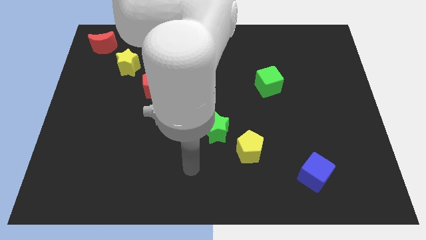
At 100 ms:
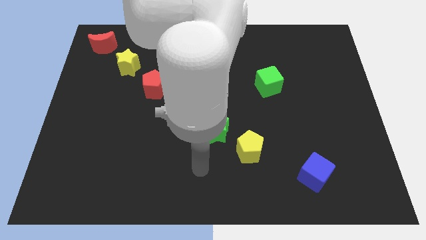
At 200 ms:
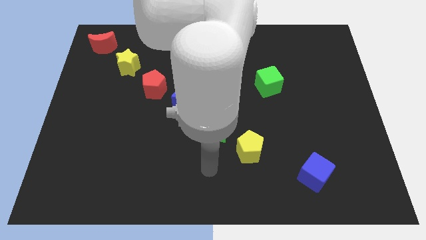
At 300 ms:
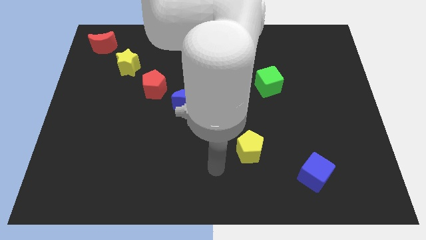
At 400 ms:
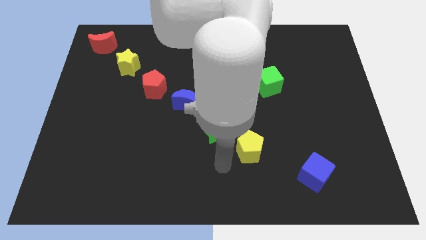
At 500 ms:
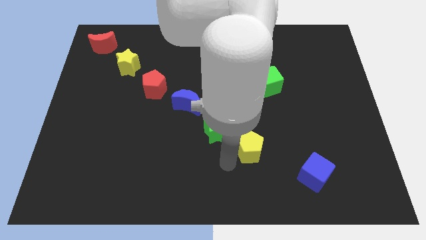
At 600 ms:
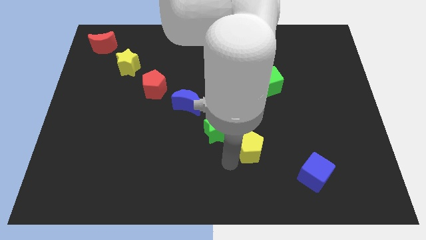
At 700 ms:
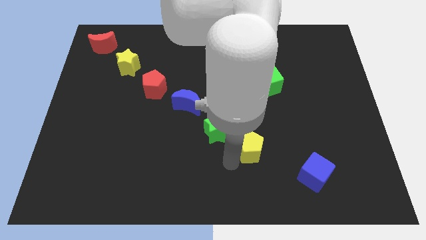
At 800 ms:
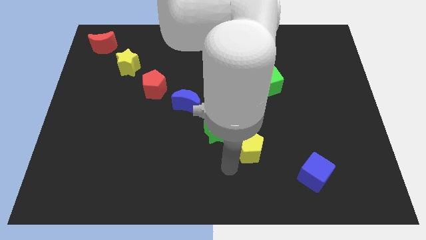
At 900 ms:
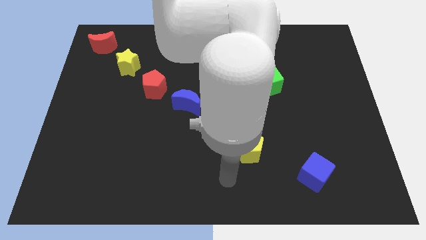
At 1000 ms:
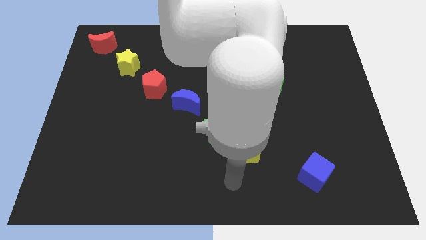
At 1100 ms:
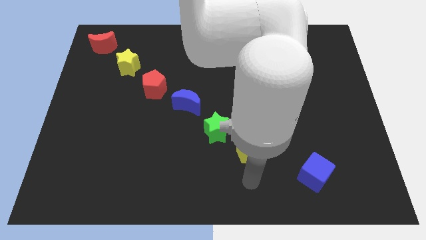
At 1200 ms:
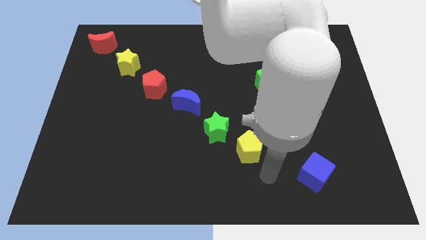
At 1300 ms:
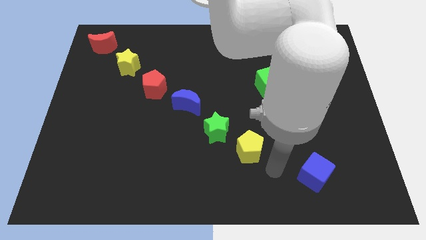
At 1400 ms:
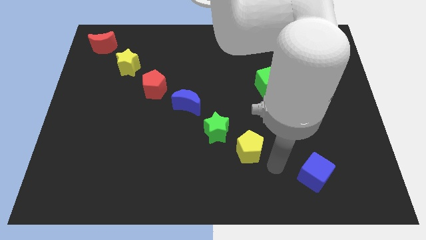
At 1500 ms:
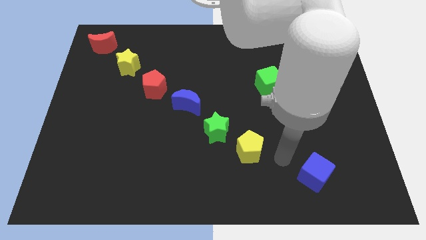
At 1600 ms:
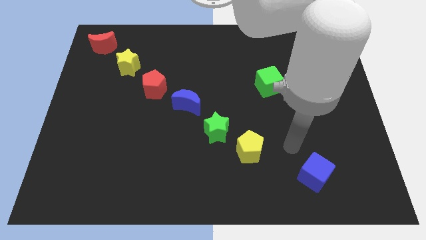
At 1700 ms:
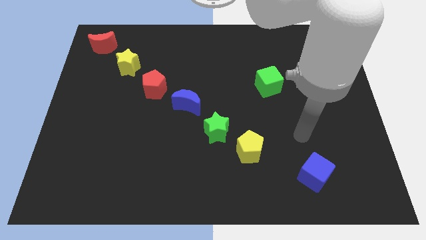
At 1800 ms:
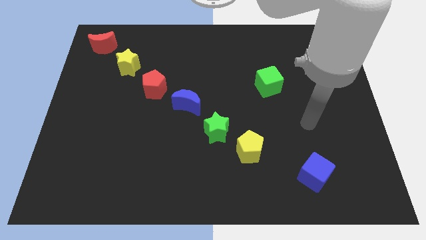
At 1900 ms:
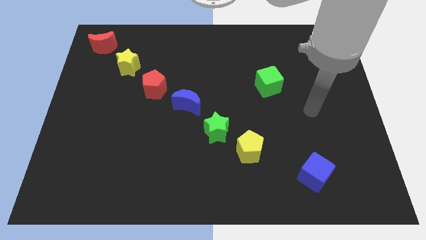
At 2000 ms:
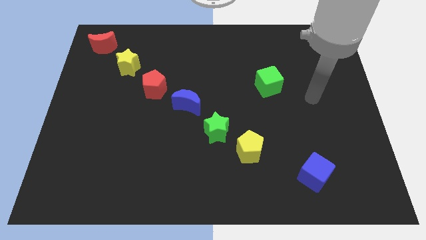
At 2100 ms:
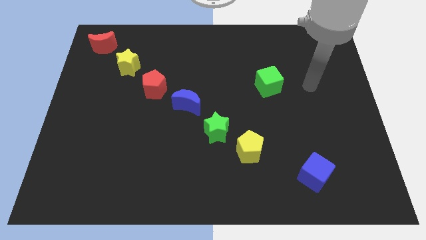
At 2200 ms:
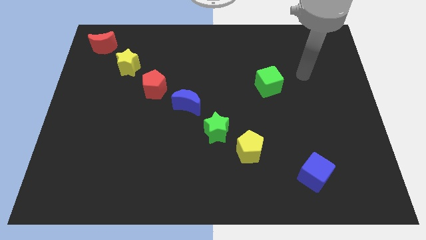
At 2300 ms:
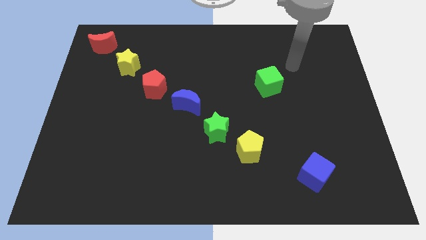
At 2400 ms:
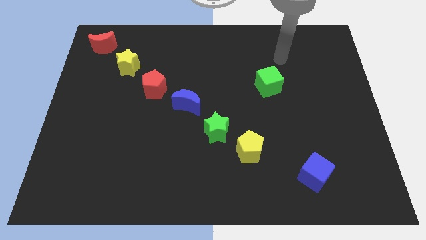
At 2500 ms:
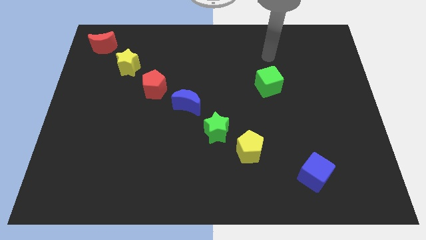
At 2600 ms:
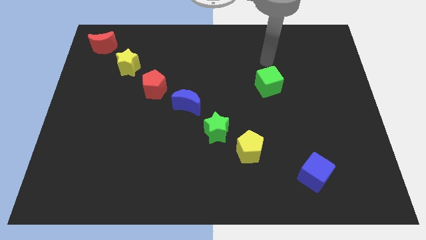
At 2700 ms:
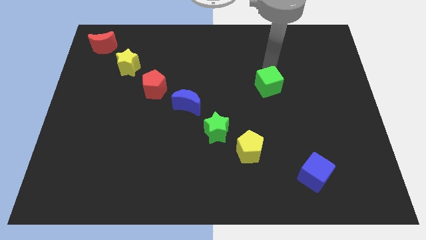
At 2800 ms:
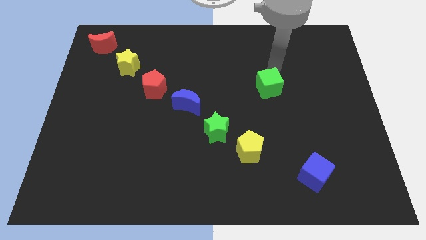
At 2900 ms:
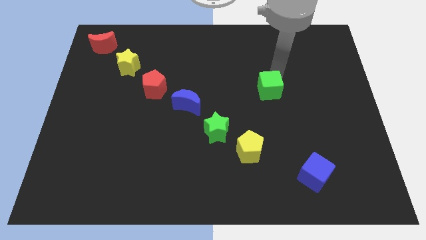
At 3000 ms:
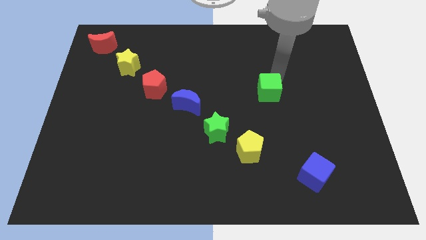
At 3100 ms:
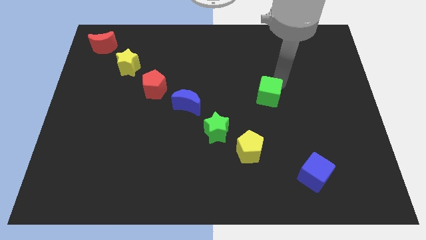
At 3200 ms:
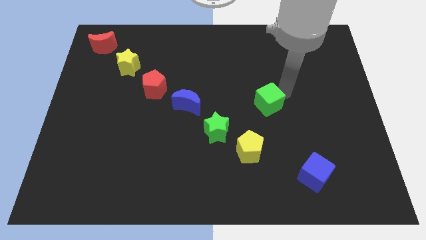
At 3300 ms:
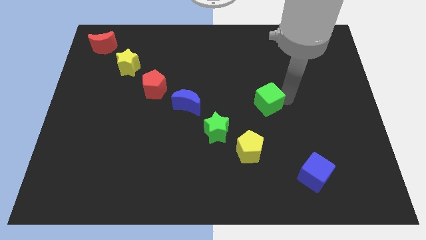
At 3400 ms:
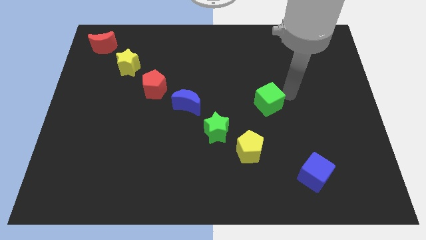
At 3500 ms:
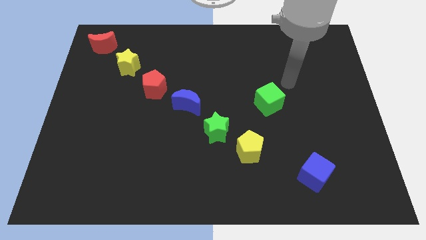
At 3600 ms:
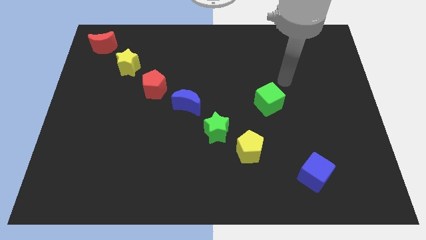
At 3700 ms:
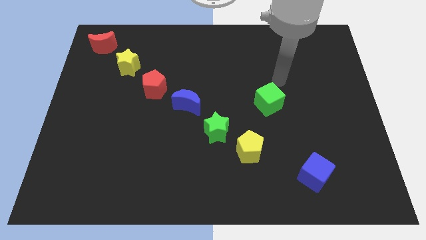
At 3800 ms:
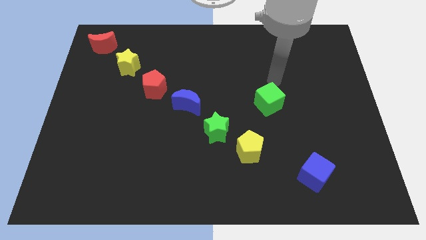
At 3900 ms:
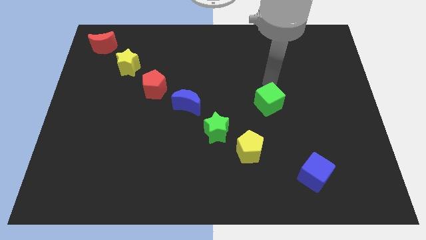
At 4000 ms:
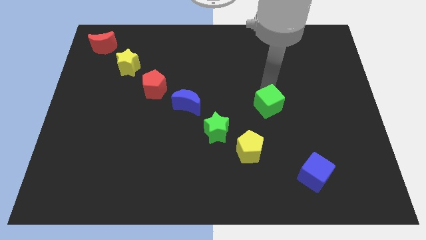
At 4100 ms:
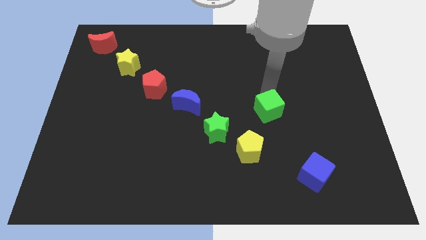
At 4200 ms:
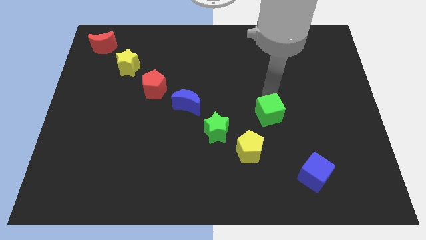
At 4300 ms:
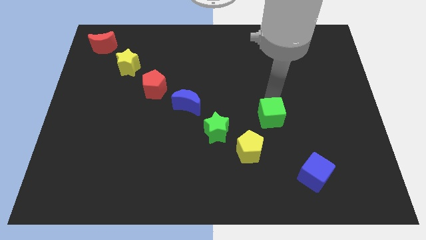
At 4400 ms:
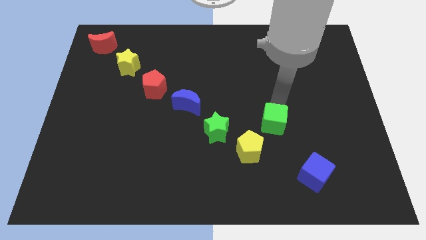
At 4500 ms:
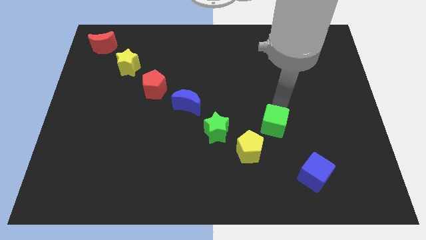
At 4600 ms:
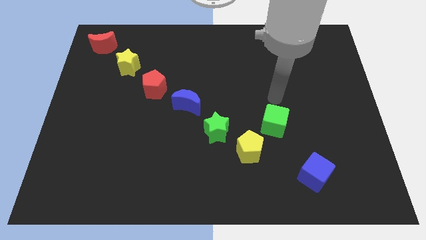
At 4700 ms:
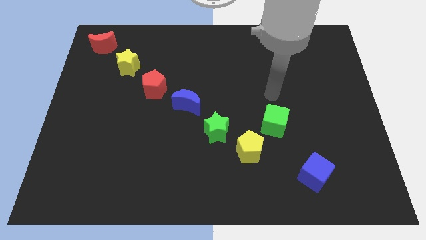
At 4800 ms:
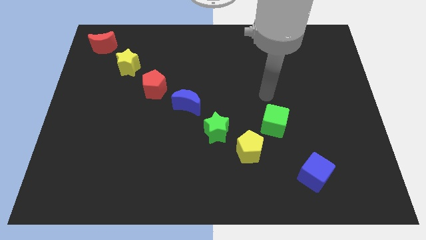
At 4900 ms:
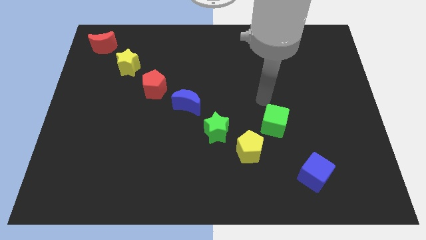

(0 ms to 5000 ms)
push the green cube to the right of the yellow pentagon

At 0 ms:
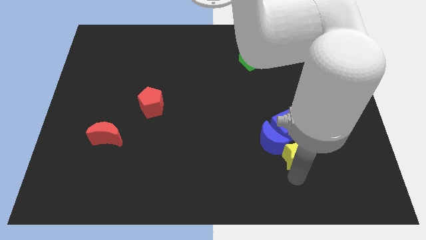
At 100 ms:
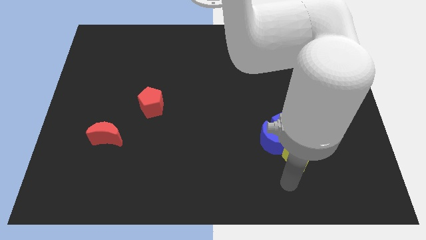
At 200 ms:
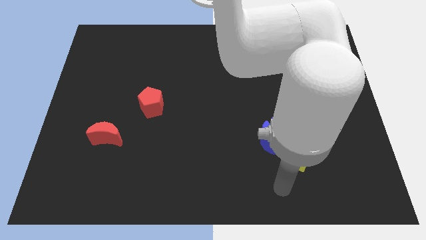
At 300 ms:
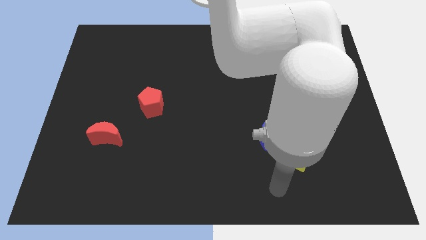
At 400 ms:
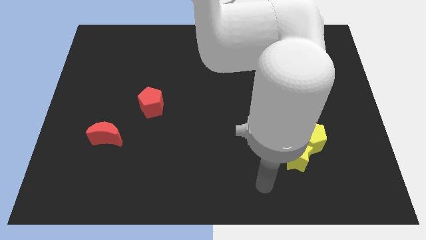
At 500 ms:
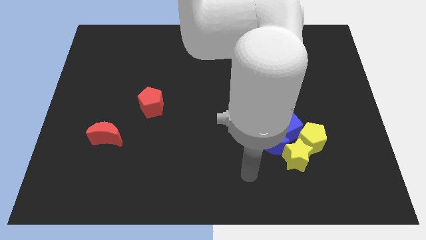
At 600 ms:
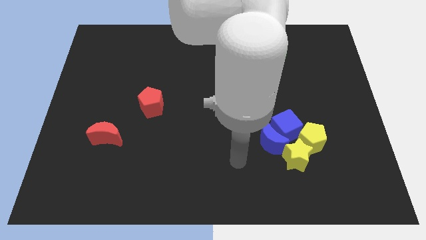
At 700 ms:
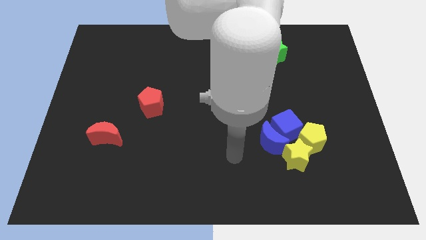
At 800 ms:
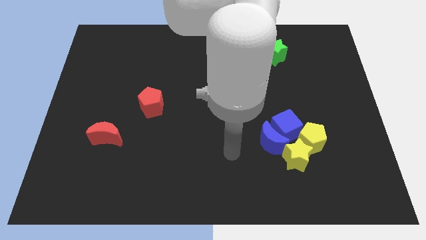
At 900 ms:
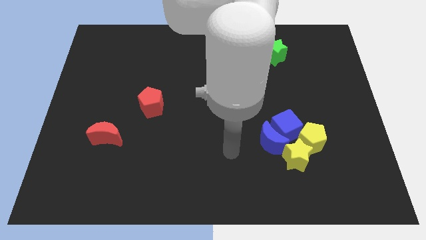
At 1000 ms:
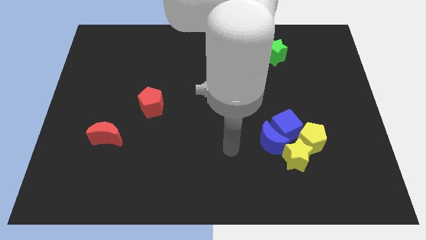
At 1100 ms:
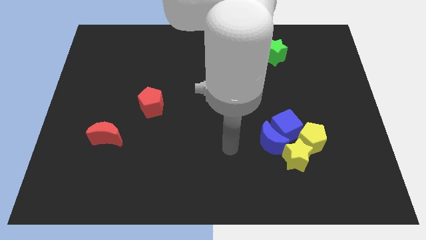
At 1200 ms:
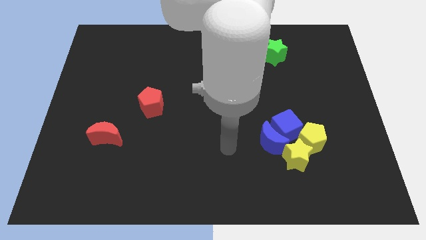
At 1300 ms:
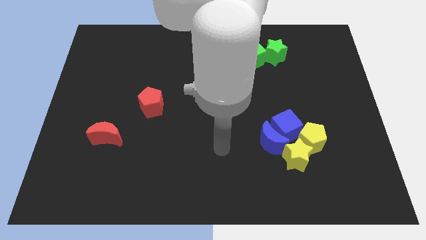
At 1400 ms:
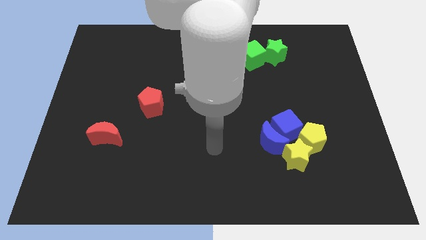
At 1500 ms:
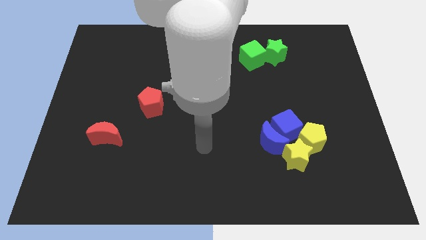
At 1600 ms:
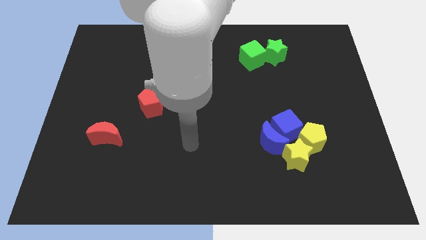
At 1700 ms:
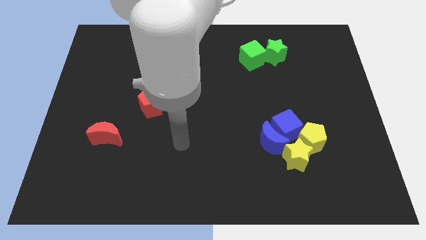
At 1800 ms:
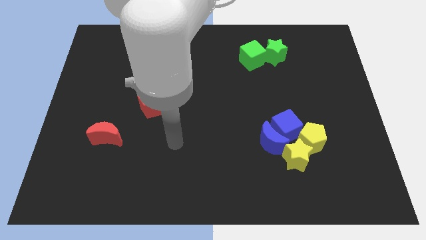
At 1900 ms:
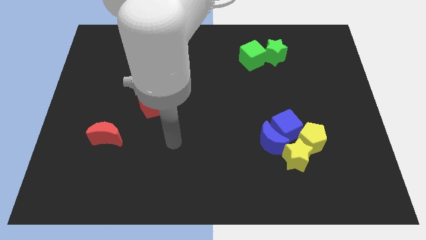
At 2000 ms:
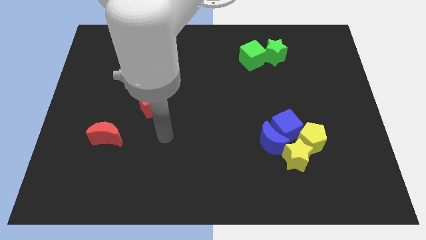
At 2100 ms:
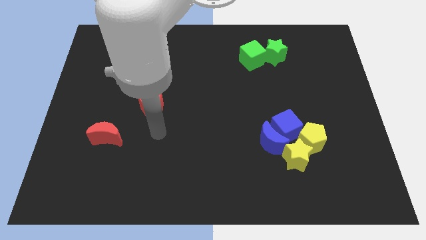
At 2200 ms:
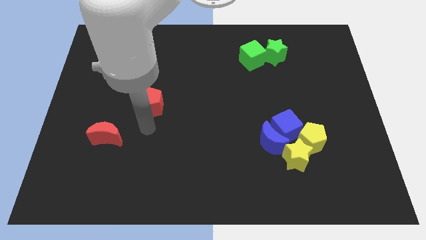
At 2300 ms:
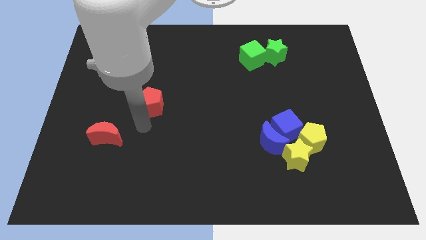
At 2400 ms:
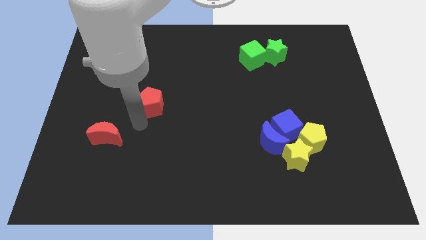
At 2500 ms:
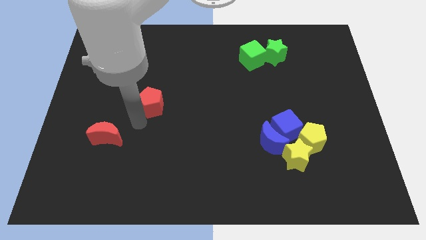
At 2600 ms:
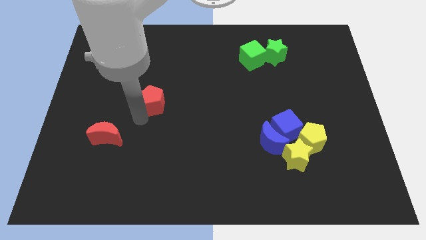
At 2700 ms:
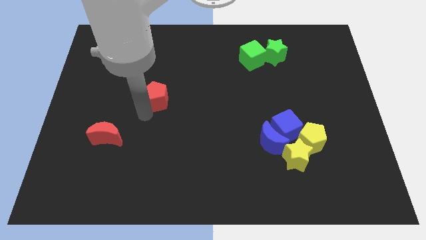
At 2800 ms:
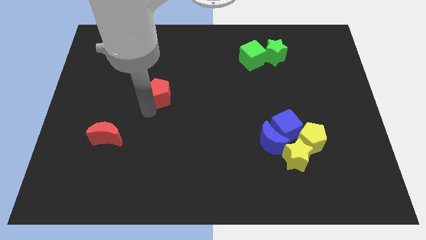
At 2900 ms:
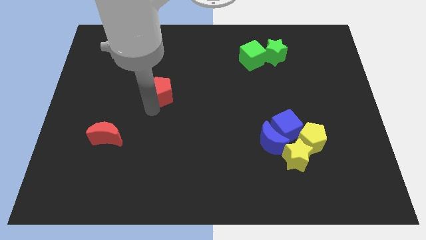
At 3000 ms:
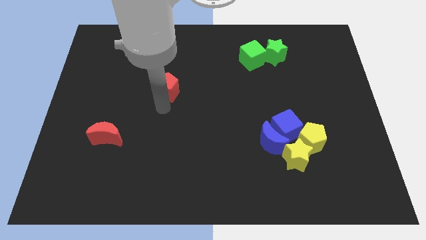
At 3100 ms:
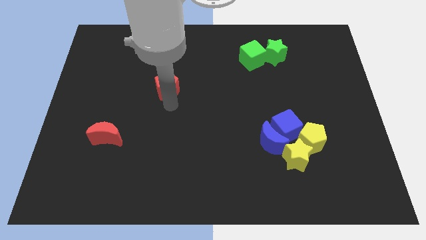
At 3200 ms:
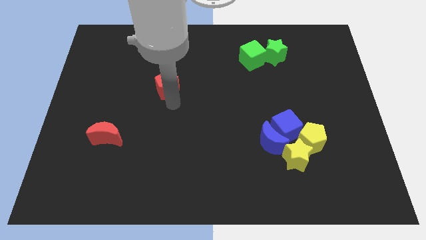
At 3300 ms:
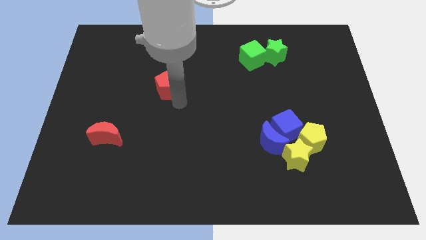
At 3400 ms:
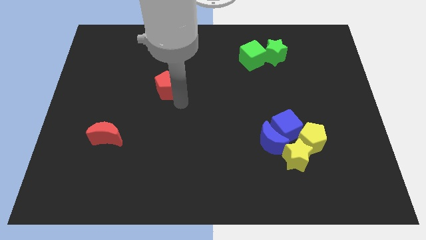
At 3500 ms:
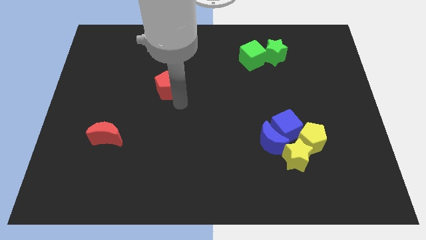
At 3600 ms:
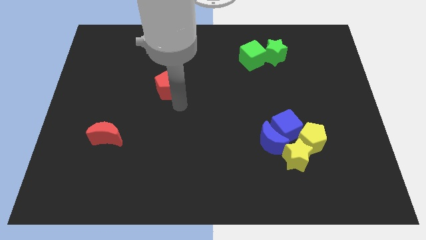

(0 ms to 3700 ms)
push the red pentagon to the top side

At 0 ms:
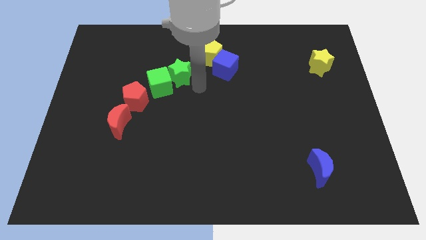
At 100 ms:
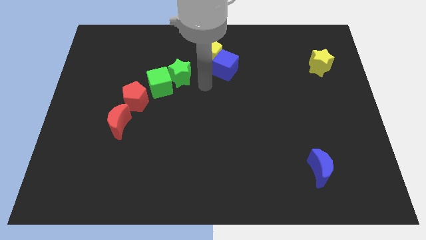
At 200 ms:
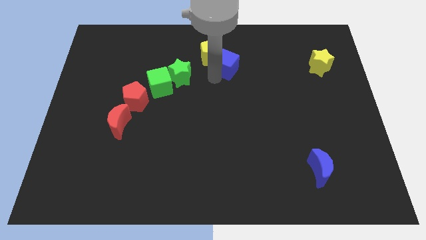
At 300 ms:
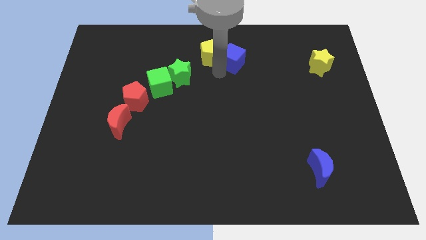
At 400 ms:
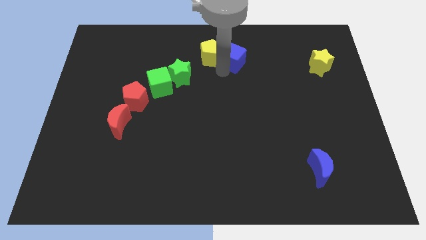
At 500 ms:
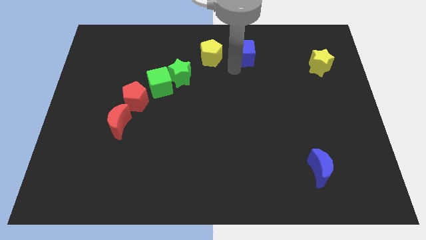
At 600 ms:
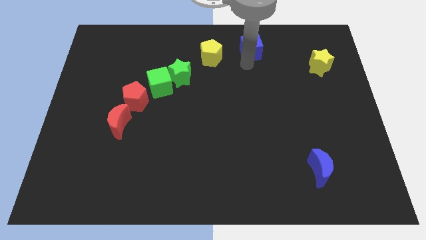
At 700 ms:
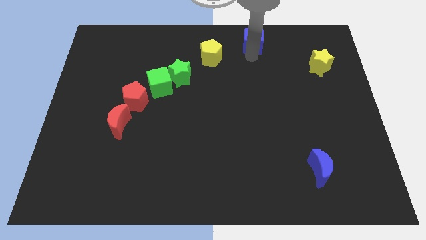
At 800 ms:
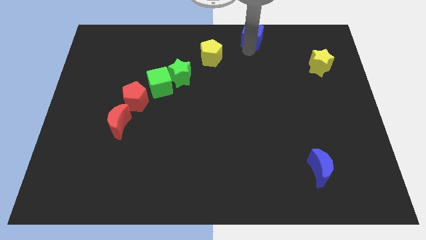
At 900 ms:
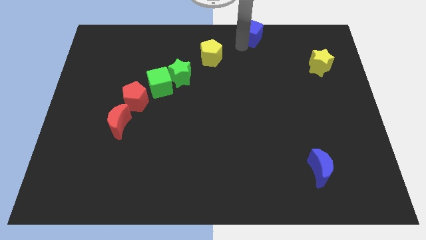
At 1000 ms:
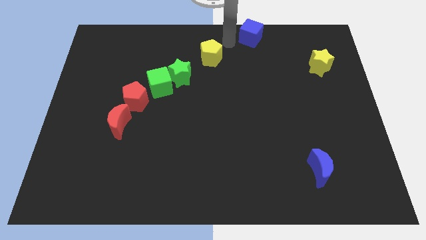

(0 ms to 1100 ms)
move the blue cube away from the yellow pentagon
